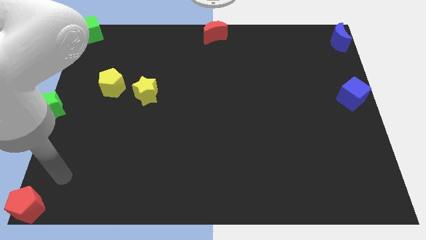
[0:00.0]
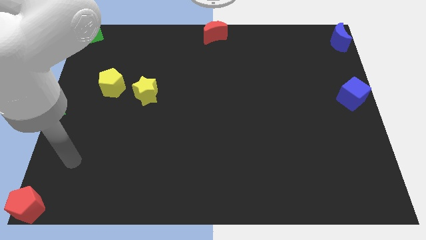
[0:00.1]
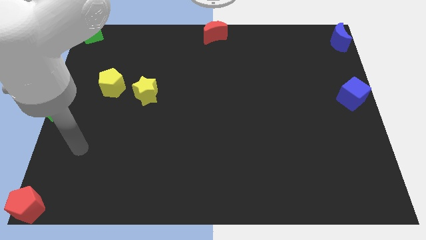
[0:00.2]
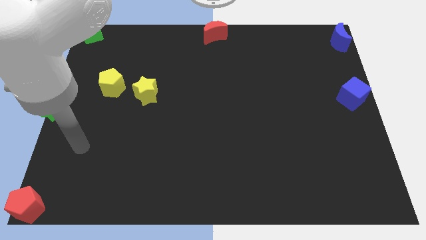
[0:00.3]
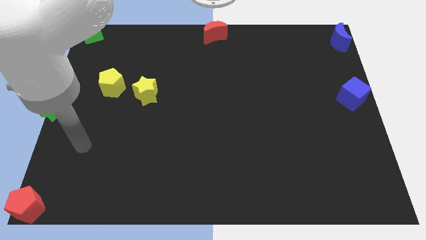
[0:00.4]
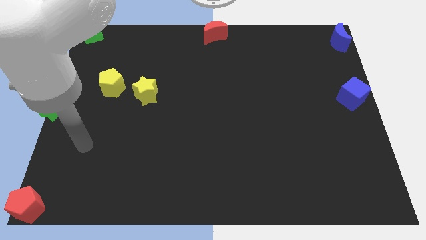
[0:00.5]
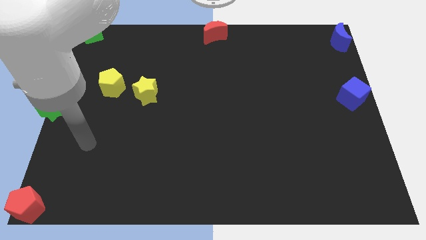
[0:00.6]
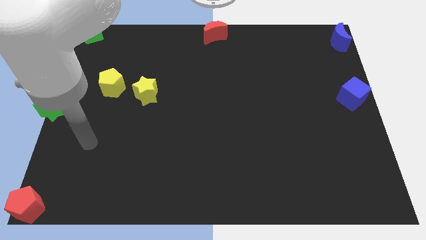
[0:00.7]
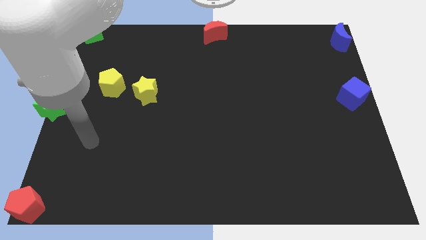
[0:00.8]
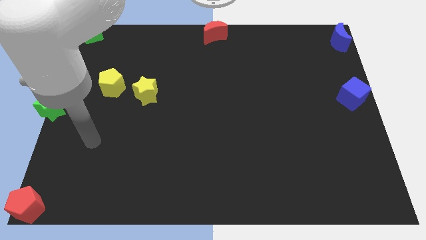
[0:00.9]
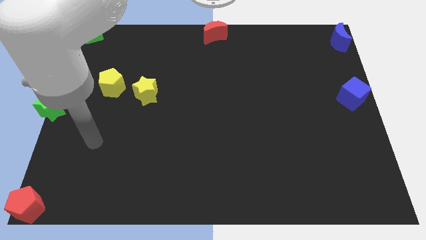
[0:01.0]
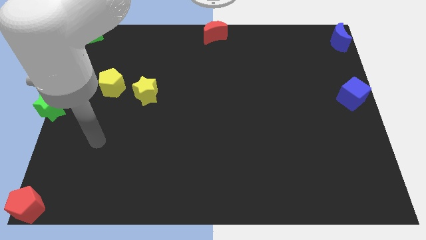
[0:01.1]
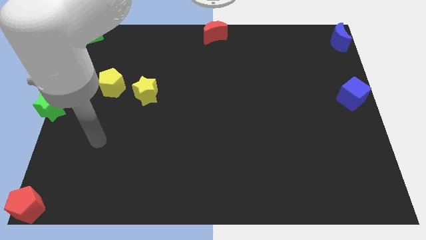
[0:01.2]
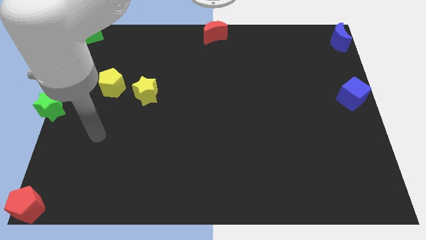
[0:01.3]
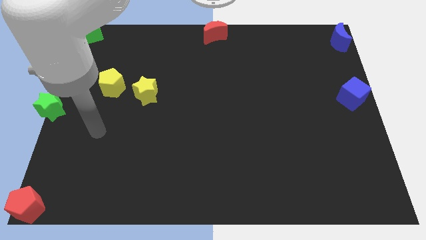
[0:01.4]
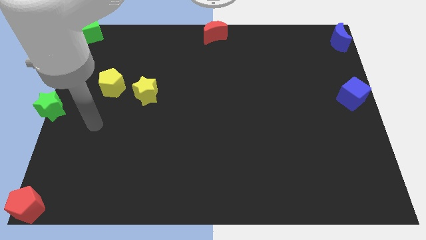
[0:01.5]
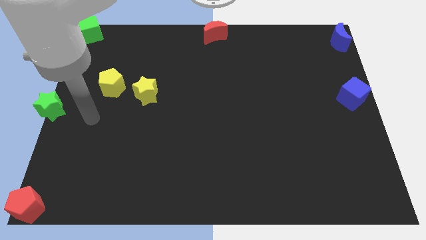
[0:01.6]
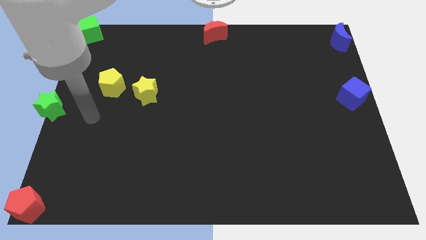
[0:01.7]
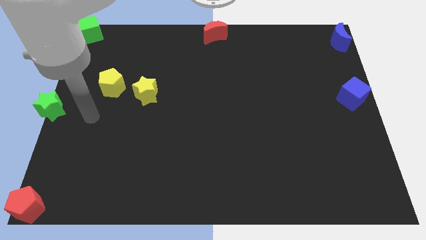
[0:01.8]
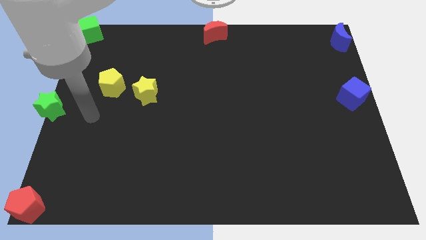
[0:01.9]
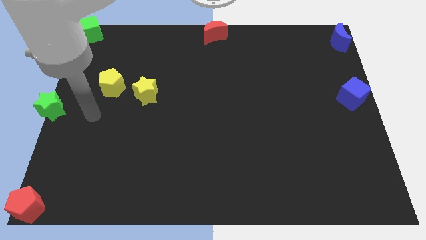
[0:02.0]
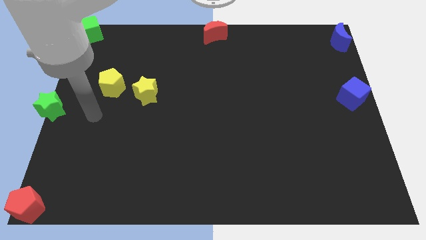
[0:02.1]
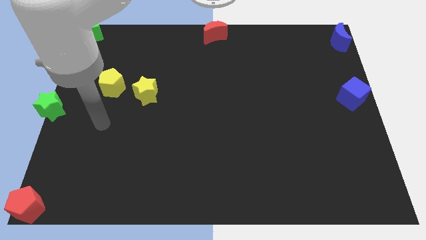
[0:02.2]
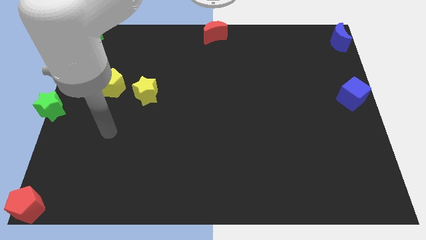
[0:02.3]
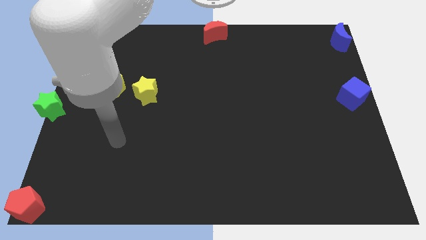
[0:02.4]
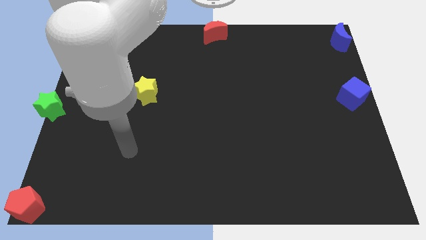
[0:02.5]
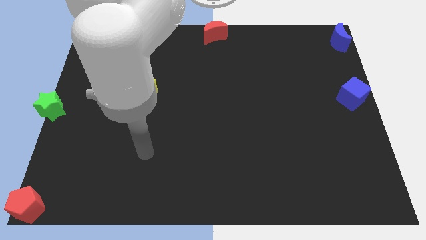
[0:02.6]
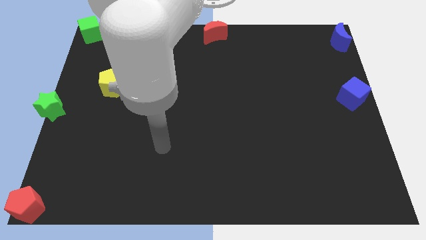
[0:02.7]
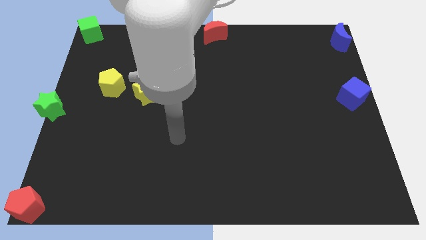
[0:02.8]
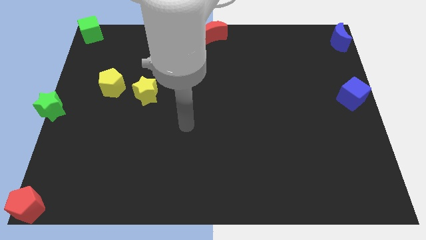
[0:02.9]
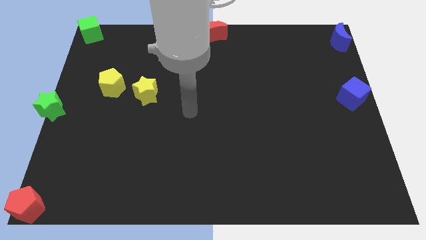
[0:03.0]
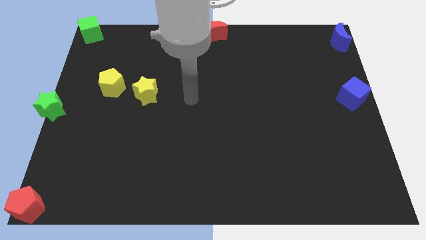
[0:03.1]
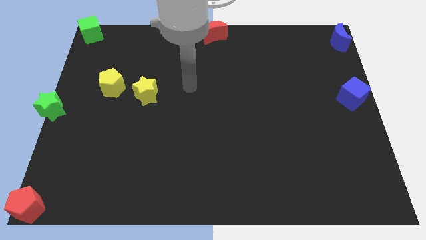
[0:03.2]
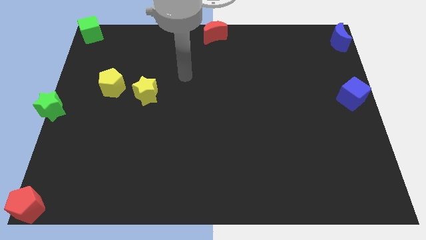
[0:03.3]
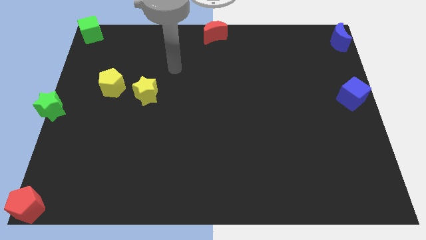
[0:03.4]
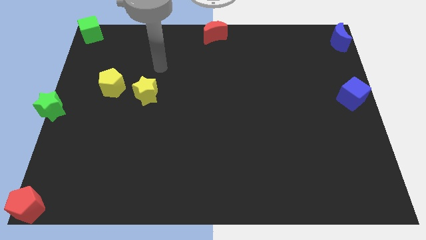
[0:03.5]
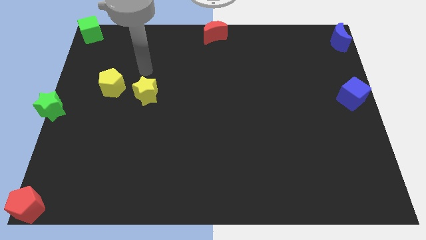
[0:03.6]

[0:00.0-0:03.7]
move your arm away from the red pentagon

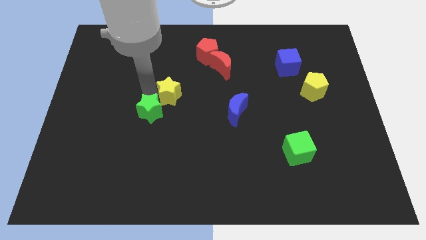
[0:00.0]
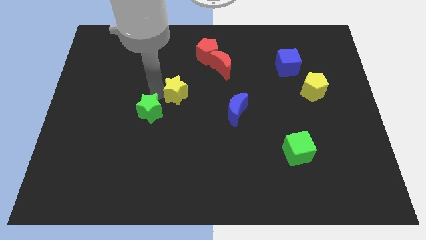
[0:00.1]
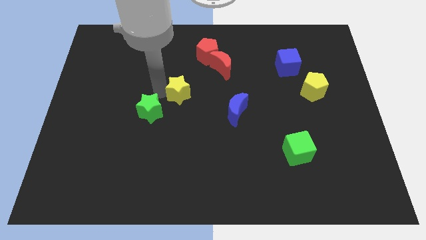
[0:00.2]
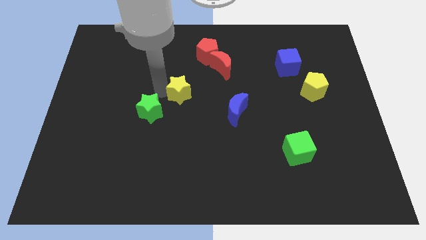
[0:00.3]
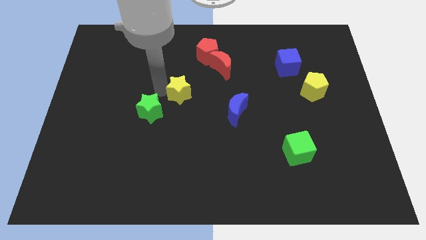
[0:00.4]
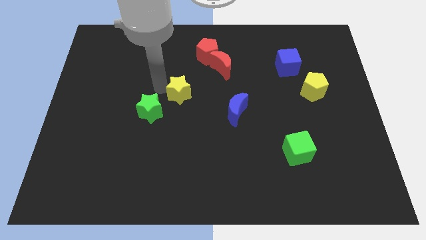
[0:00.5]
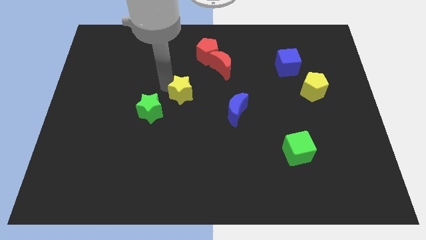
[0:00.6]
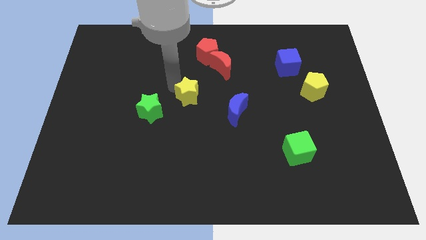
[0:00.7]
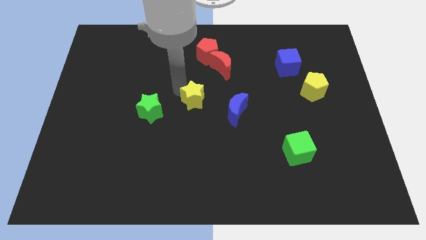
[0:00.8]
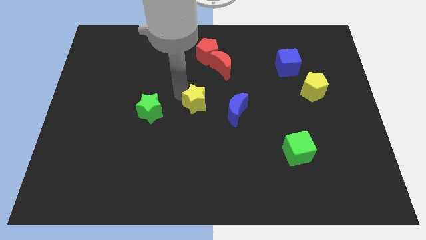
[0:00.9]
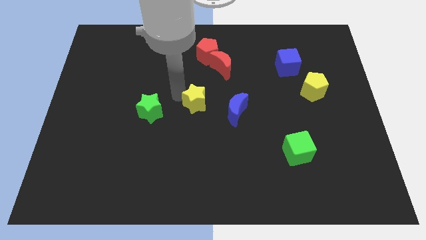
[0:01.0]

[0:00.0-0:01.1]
separate the yellow star from the green star

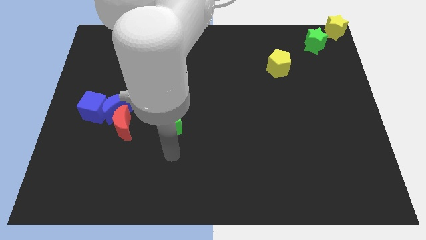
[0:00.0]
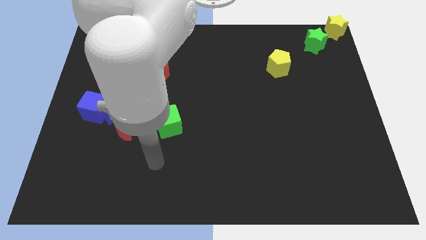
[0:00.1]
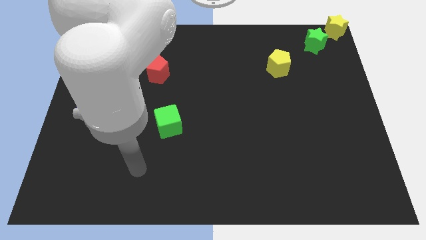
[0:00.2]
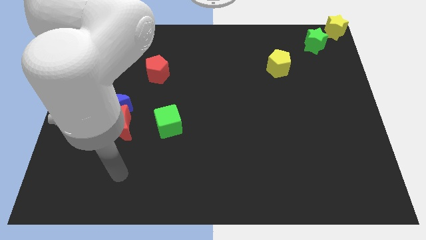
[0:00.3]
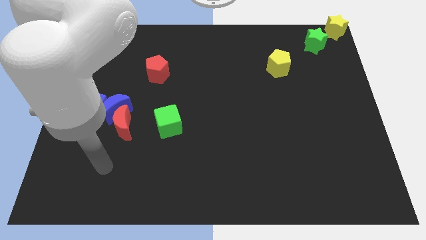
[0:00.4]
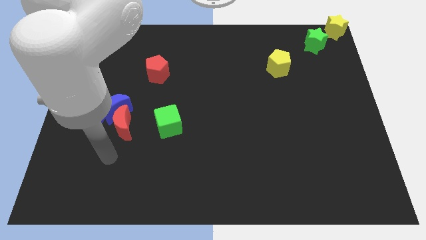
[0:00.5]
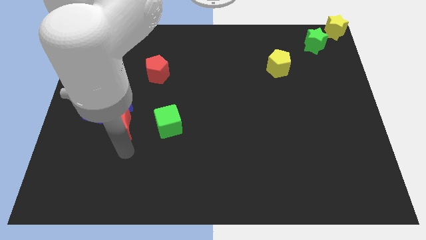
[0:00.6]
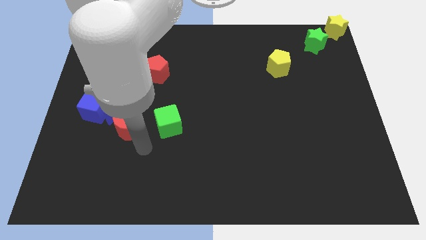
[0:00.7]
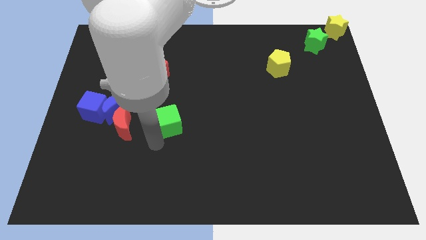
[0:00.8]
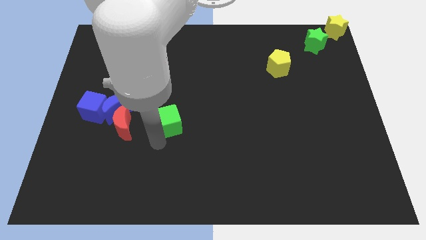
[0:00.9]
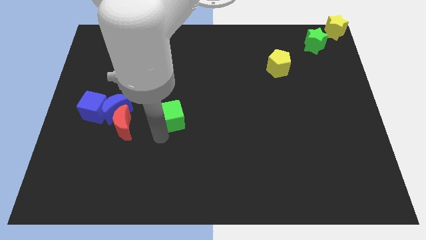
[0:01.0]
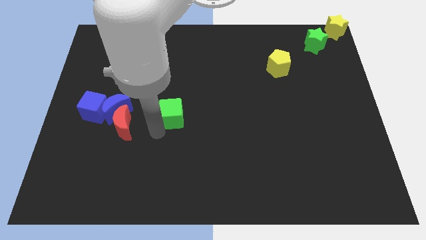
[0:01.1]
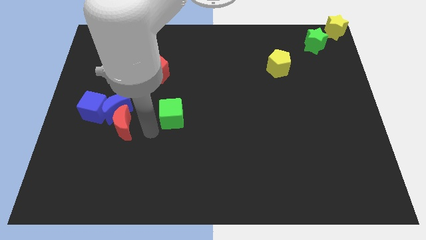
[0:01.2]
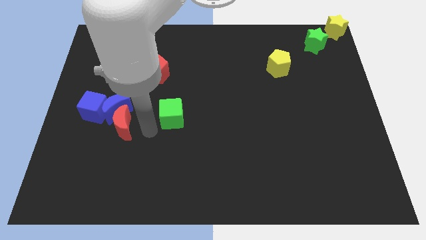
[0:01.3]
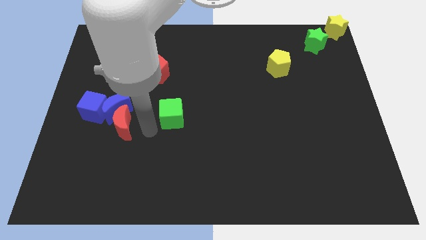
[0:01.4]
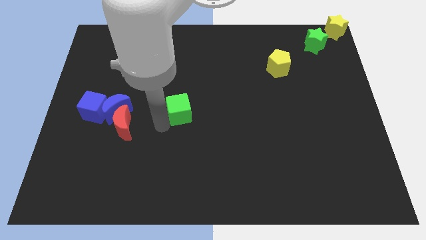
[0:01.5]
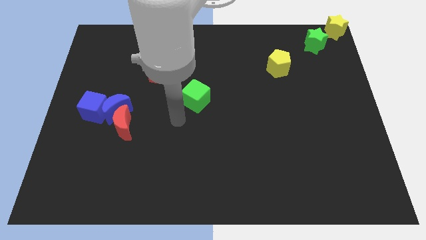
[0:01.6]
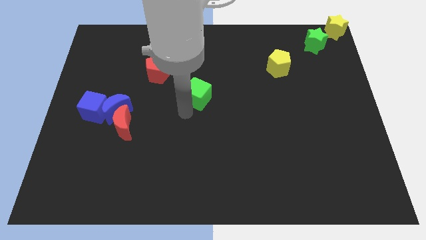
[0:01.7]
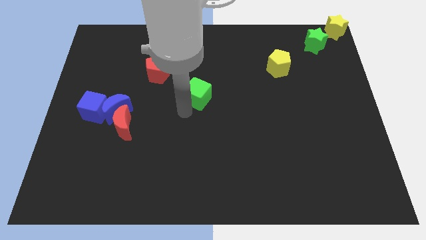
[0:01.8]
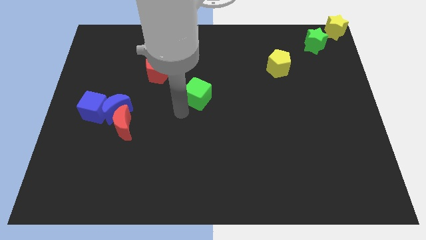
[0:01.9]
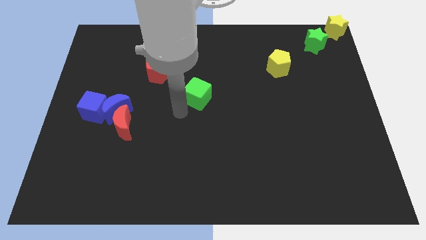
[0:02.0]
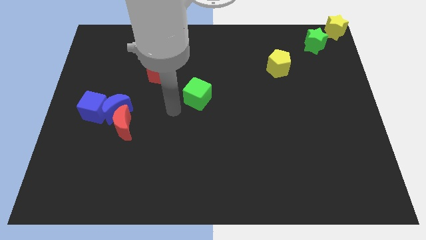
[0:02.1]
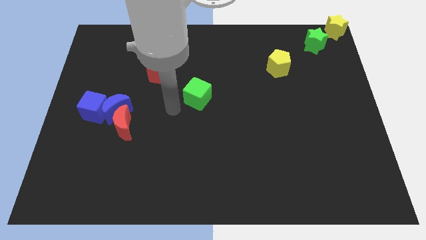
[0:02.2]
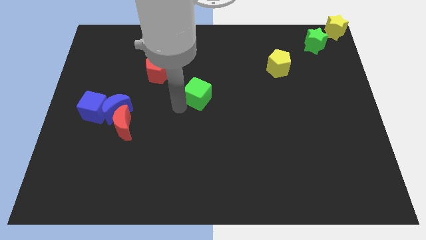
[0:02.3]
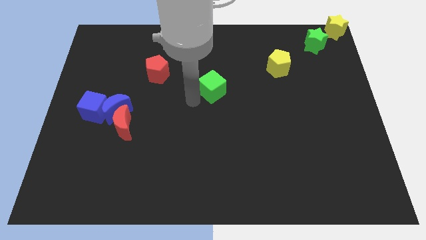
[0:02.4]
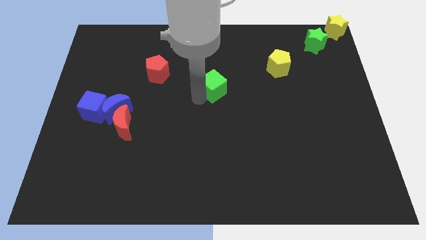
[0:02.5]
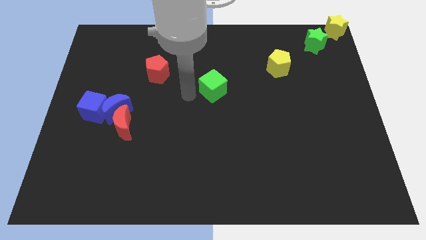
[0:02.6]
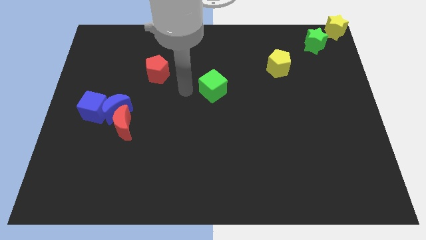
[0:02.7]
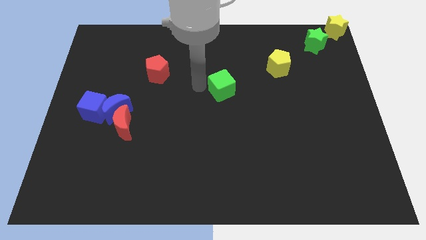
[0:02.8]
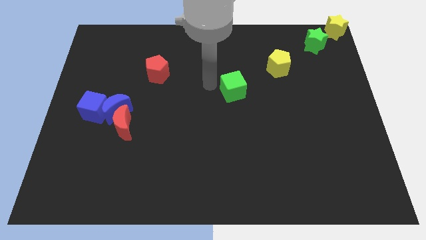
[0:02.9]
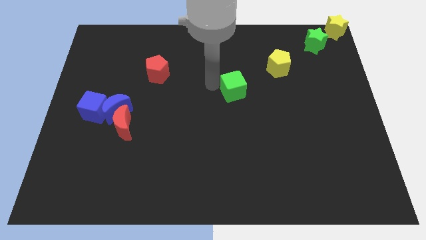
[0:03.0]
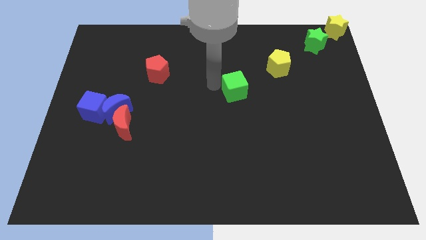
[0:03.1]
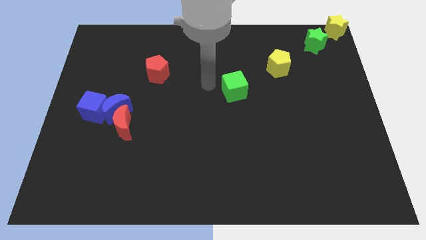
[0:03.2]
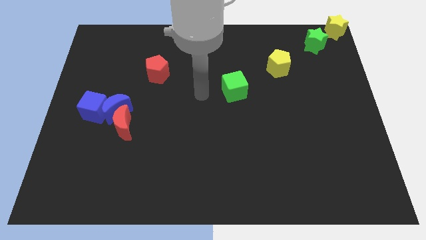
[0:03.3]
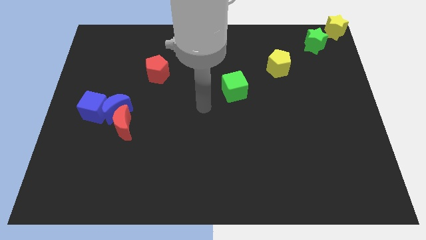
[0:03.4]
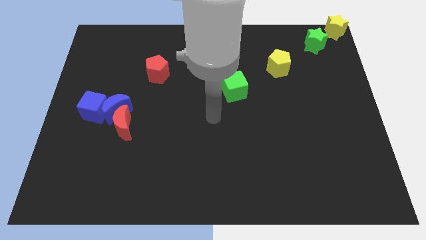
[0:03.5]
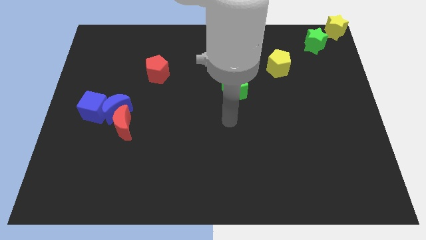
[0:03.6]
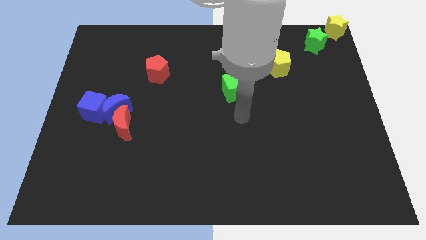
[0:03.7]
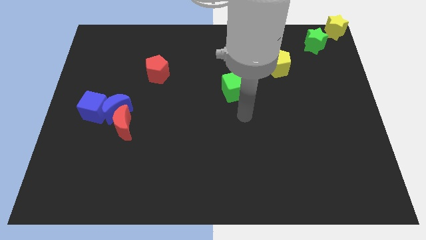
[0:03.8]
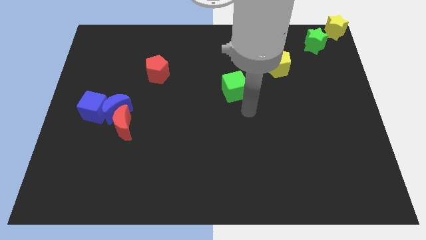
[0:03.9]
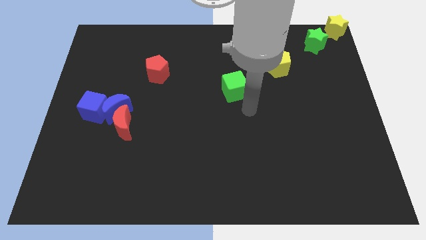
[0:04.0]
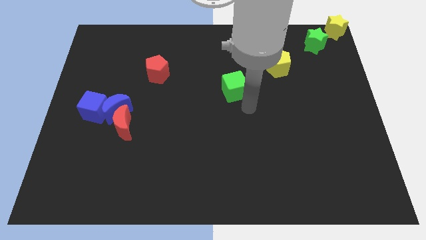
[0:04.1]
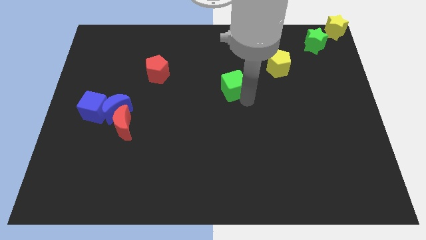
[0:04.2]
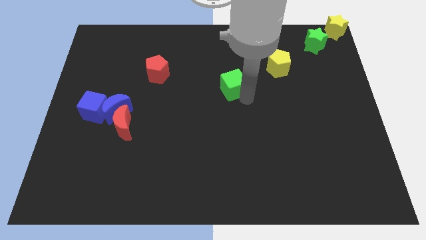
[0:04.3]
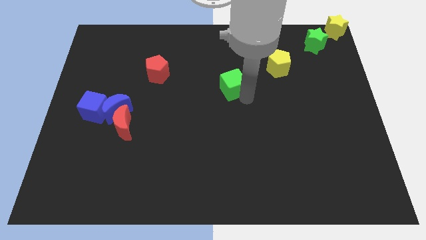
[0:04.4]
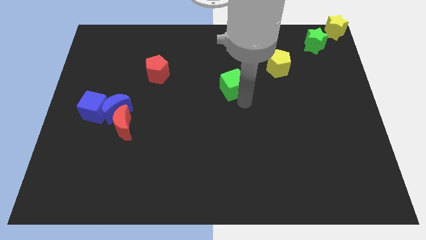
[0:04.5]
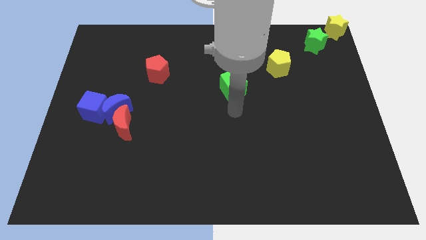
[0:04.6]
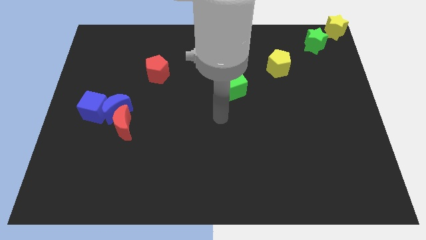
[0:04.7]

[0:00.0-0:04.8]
move green cube towards the yellow pentagon
